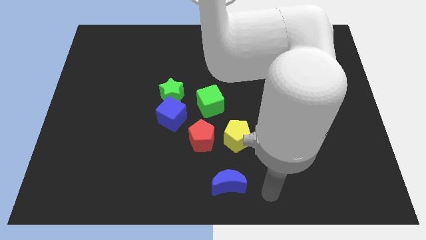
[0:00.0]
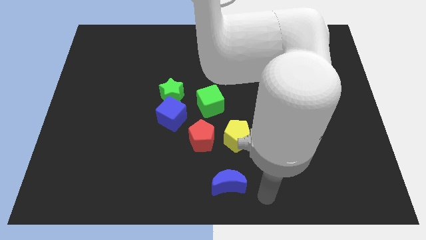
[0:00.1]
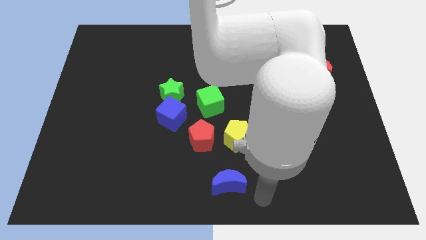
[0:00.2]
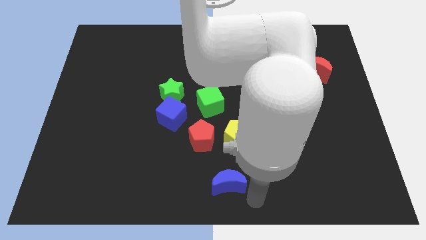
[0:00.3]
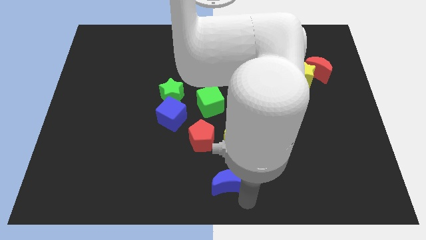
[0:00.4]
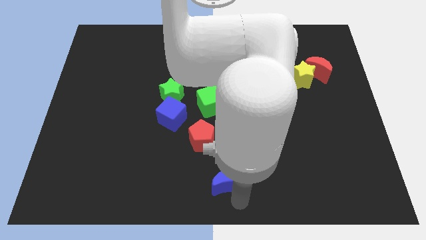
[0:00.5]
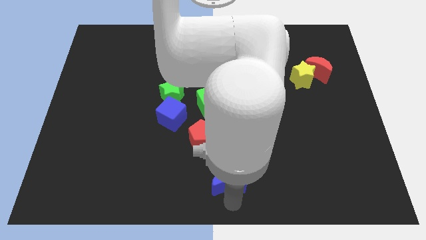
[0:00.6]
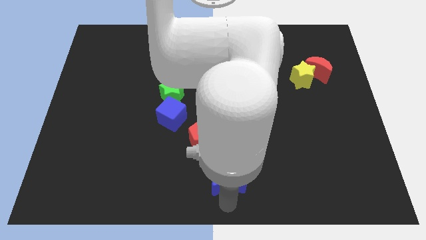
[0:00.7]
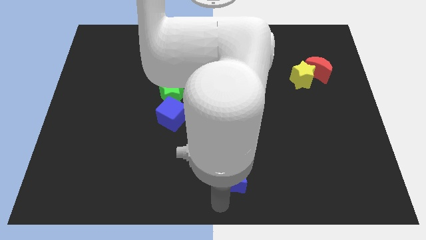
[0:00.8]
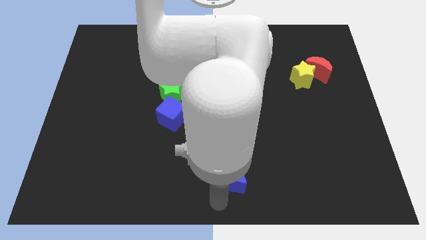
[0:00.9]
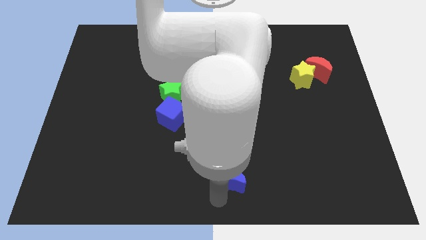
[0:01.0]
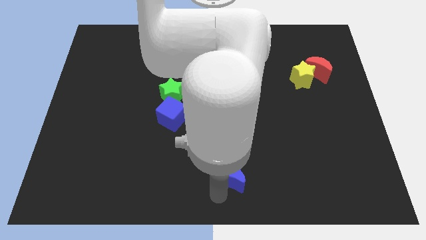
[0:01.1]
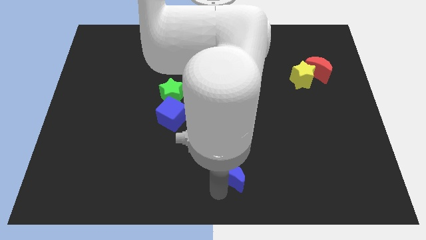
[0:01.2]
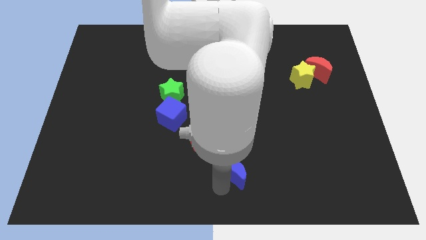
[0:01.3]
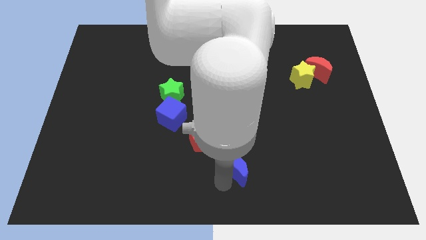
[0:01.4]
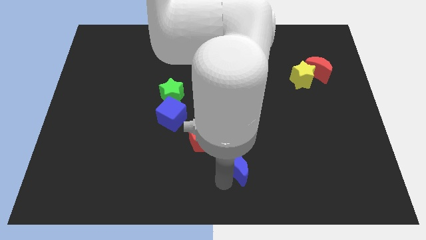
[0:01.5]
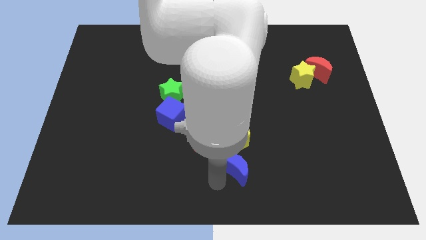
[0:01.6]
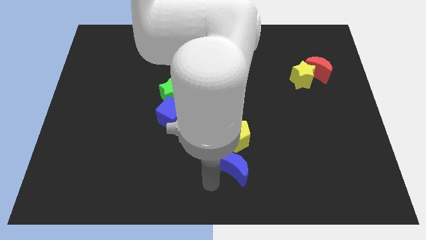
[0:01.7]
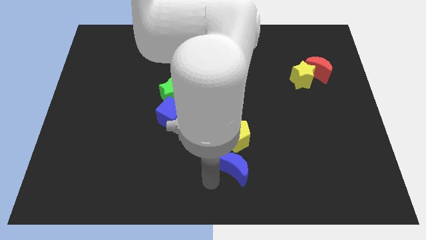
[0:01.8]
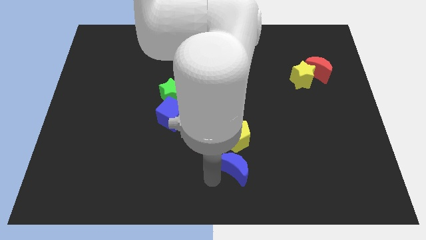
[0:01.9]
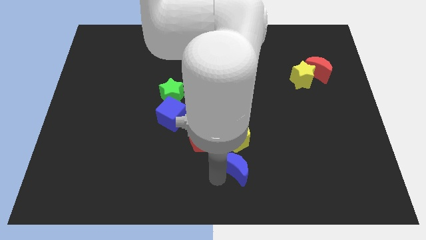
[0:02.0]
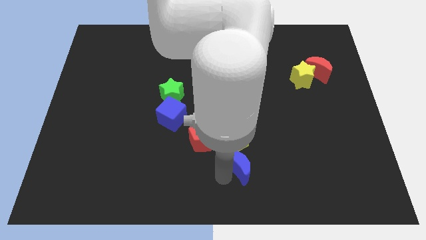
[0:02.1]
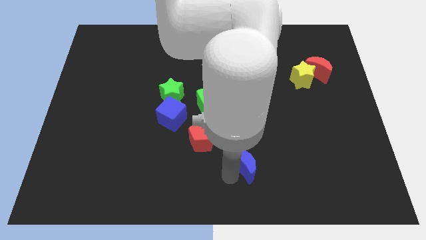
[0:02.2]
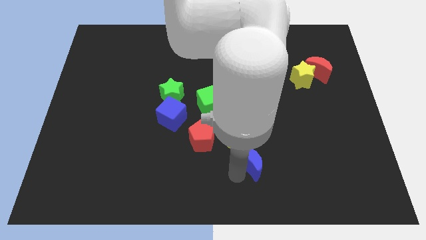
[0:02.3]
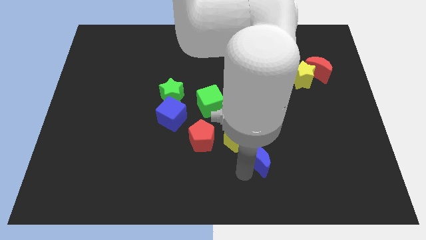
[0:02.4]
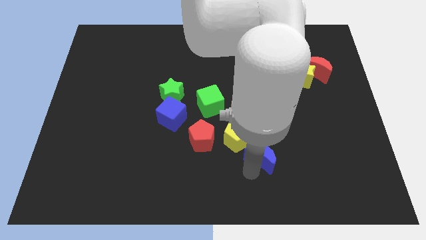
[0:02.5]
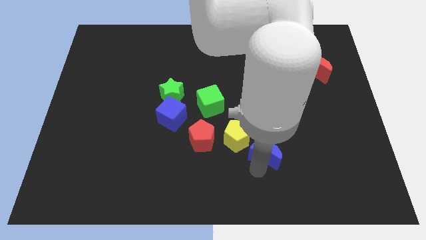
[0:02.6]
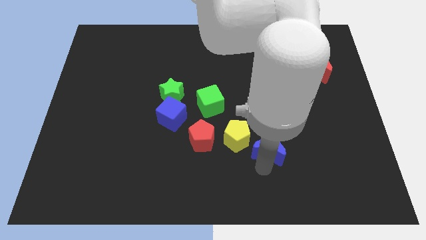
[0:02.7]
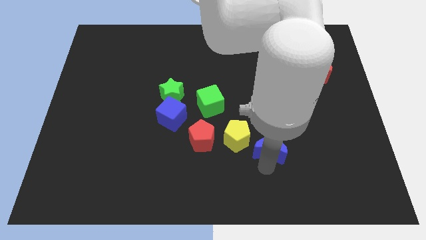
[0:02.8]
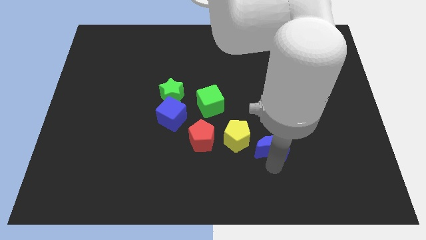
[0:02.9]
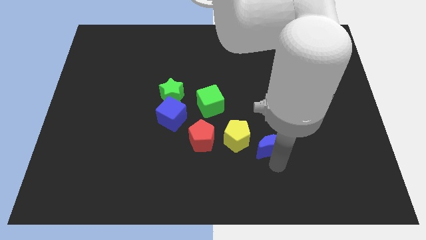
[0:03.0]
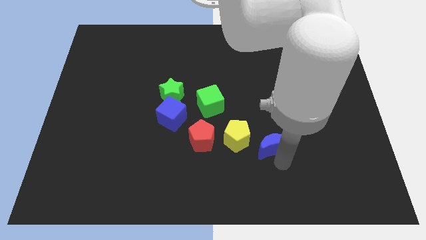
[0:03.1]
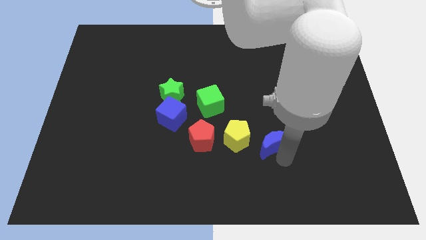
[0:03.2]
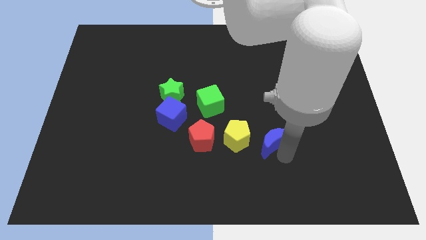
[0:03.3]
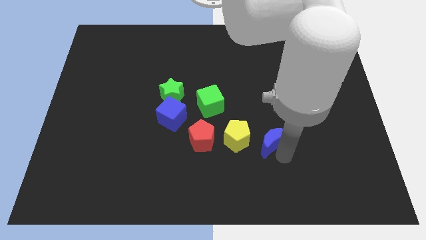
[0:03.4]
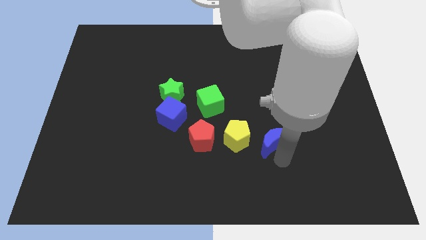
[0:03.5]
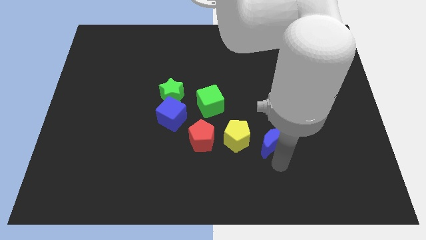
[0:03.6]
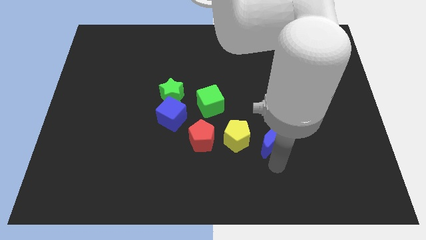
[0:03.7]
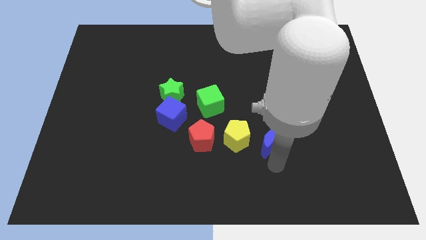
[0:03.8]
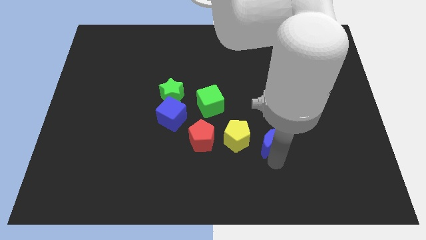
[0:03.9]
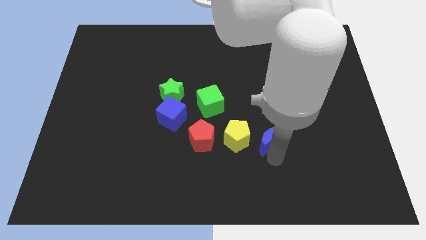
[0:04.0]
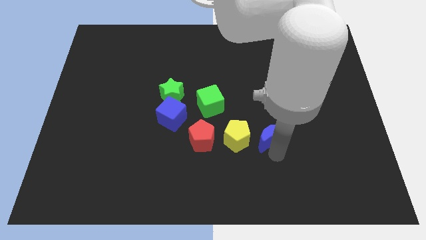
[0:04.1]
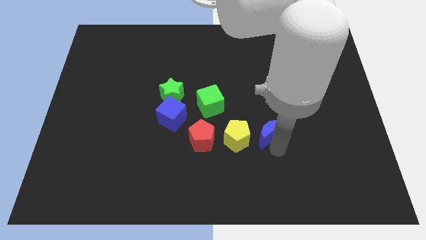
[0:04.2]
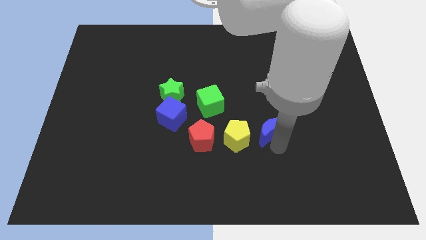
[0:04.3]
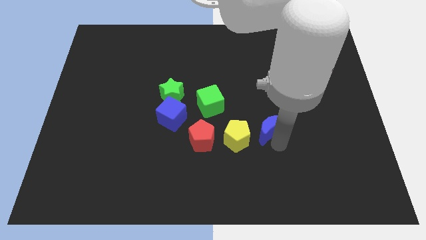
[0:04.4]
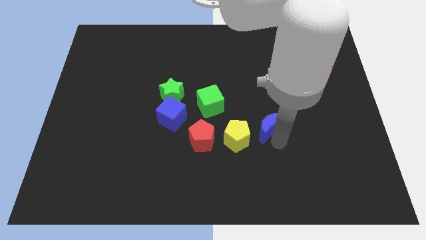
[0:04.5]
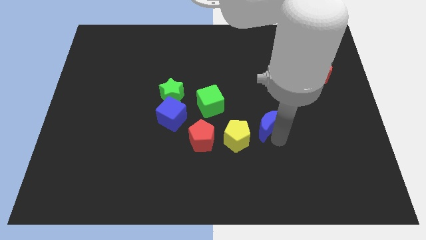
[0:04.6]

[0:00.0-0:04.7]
push the blue moon to the right side of the yellow pentagon

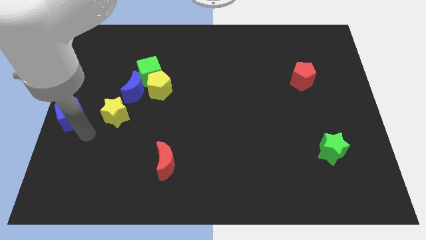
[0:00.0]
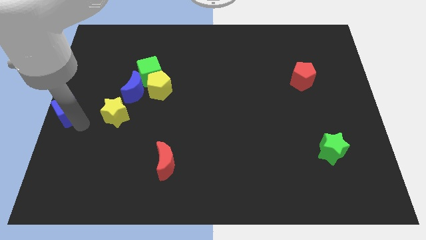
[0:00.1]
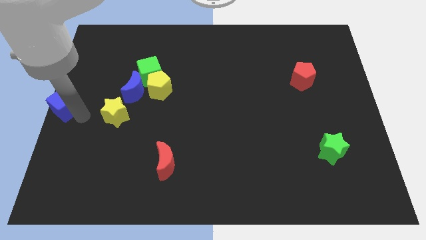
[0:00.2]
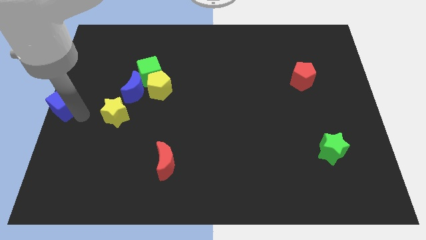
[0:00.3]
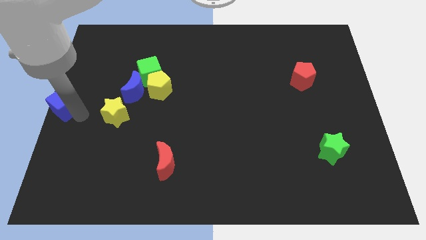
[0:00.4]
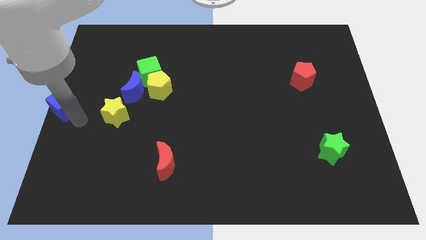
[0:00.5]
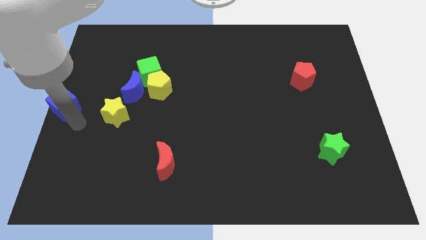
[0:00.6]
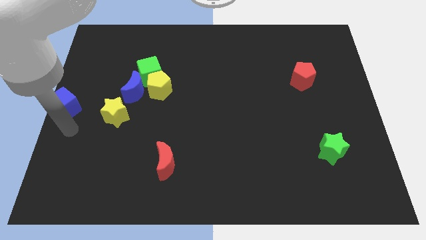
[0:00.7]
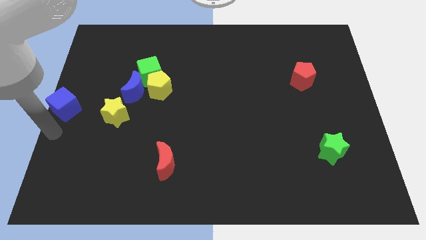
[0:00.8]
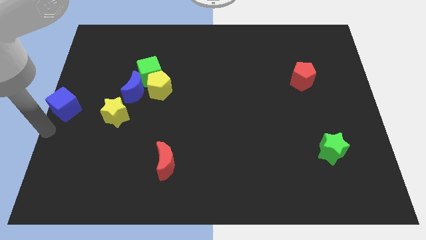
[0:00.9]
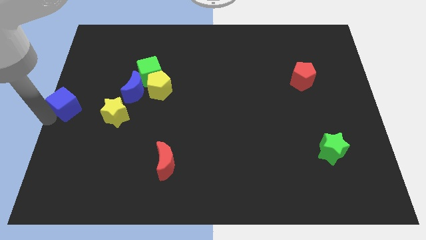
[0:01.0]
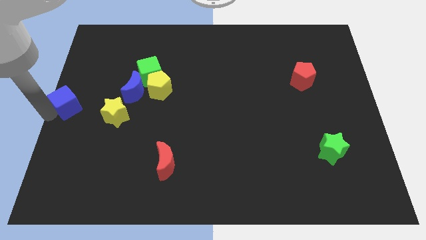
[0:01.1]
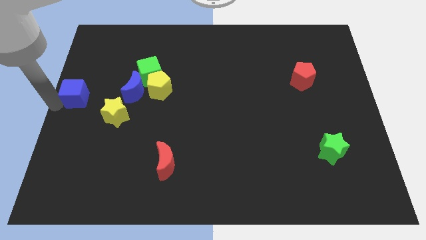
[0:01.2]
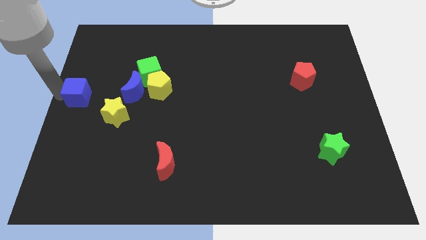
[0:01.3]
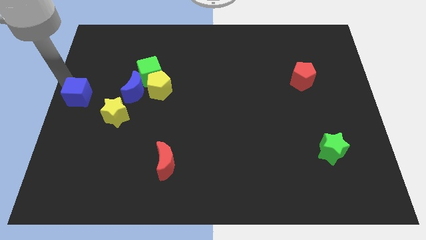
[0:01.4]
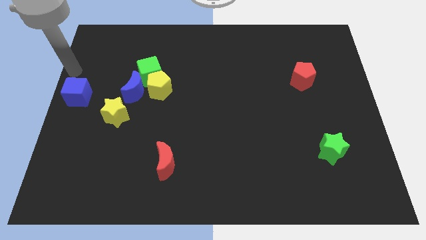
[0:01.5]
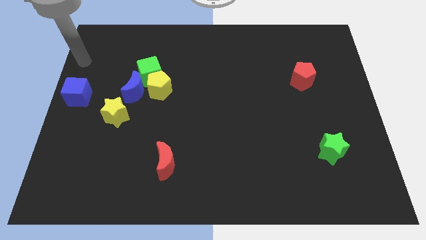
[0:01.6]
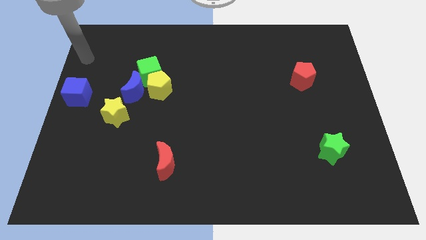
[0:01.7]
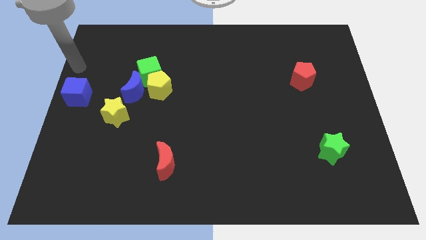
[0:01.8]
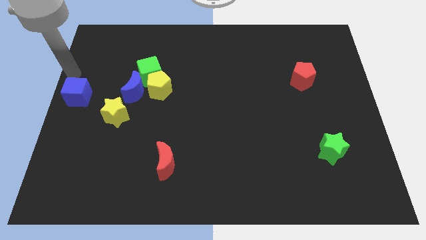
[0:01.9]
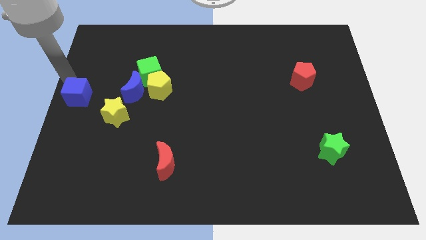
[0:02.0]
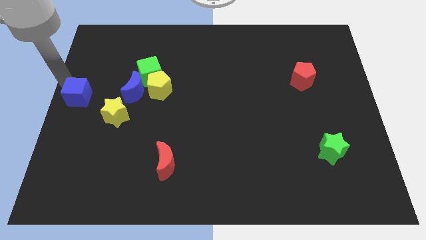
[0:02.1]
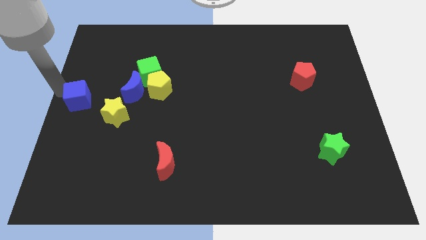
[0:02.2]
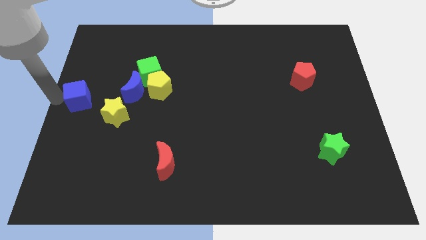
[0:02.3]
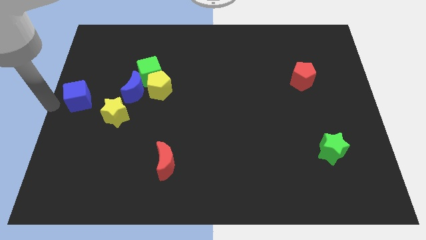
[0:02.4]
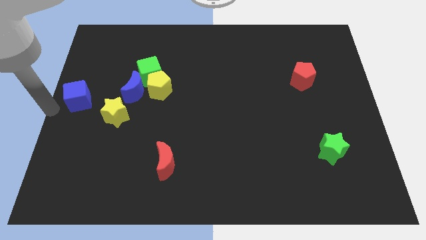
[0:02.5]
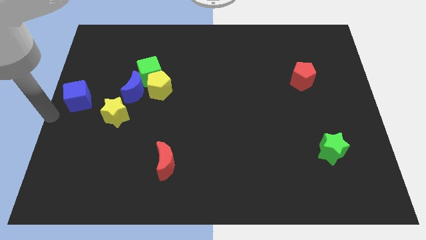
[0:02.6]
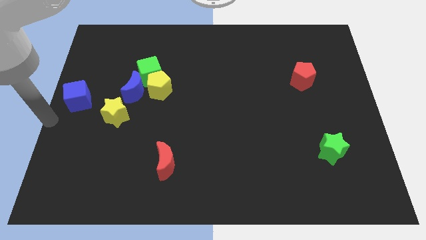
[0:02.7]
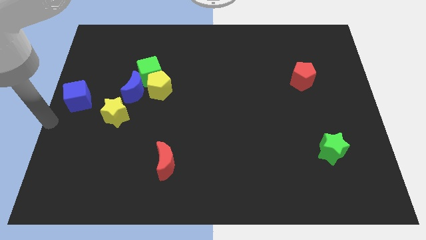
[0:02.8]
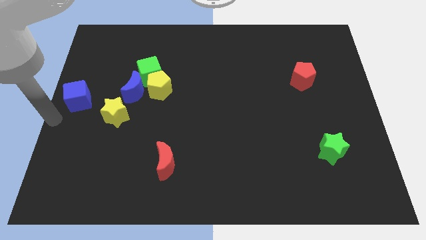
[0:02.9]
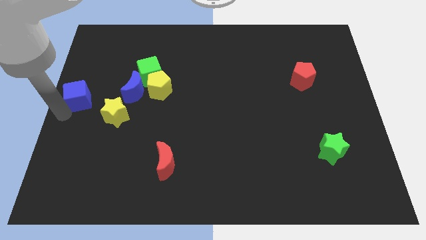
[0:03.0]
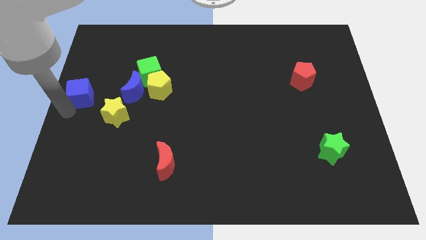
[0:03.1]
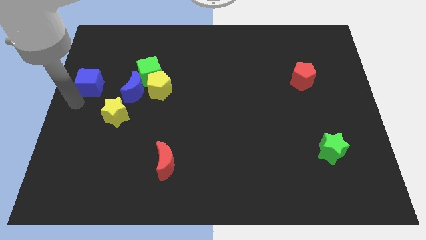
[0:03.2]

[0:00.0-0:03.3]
place the blue cube to the left of the blue moon

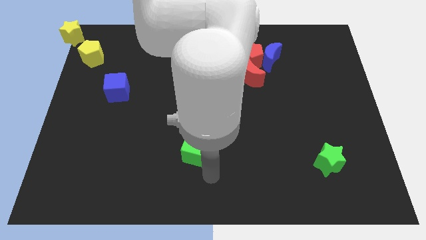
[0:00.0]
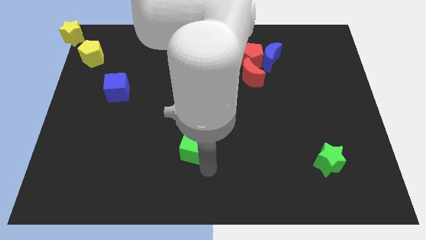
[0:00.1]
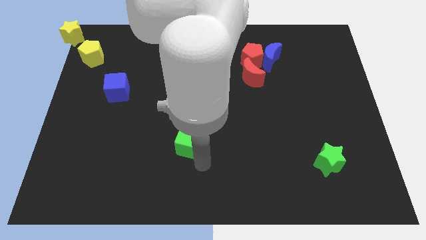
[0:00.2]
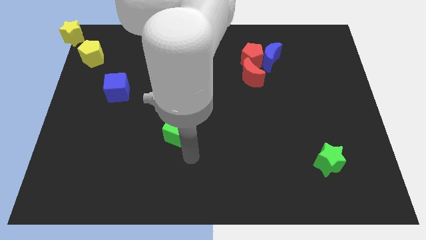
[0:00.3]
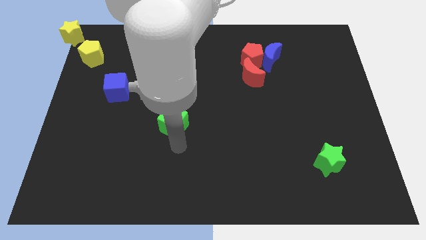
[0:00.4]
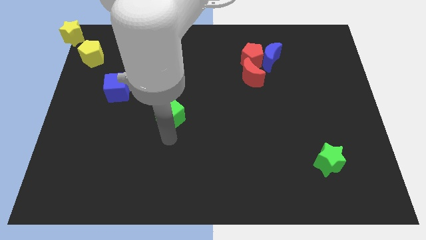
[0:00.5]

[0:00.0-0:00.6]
move the green cube to the top of the board

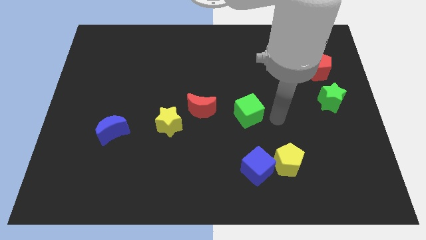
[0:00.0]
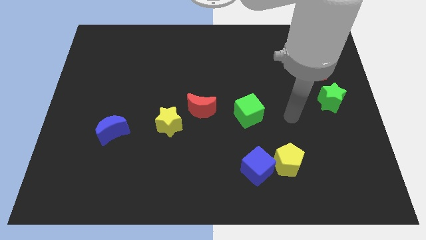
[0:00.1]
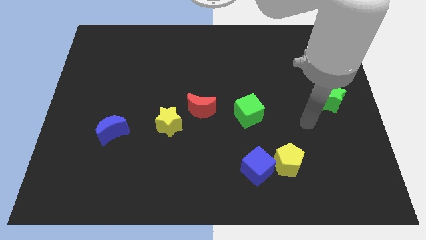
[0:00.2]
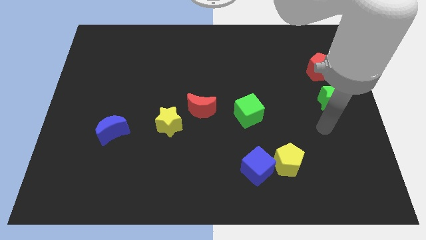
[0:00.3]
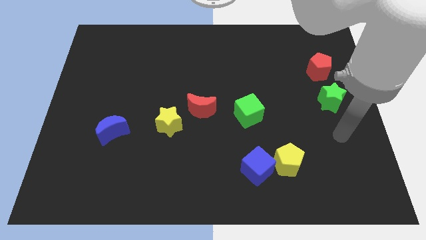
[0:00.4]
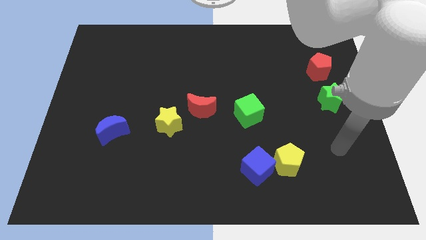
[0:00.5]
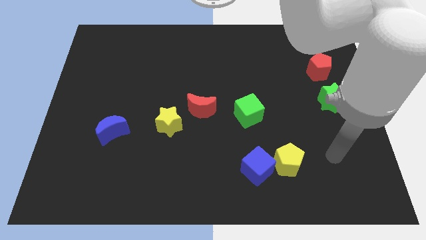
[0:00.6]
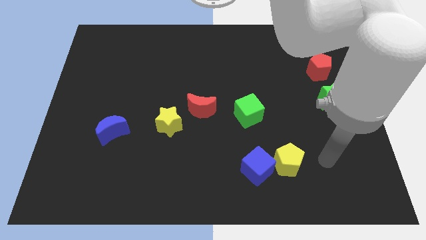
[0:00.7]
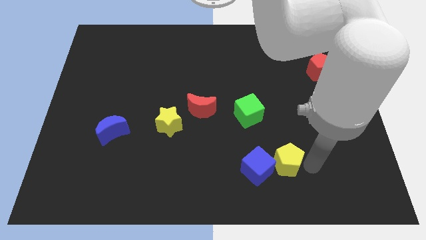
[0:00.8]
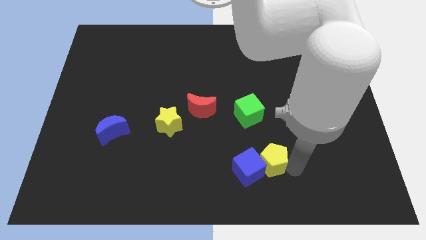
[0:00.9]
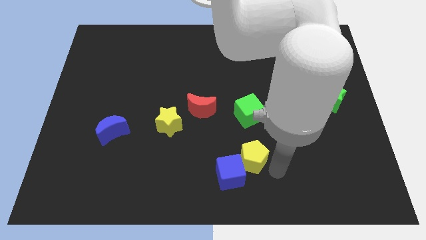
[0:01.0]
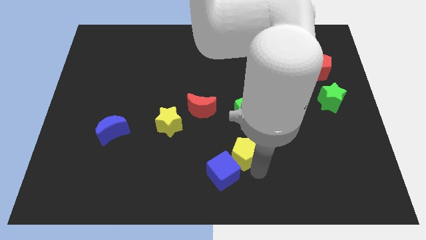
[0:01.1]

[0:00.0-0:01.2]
push the yellow pentagon and the blue cube slightly to the left
